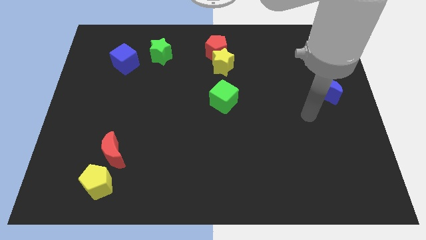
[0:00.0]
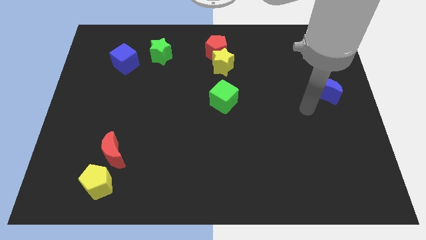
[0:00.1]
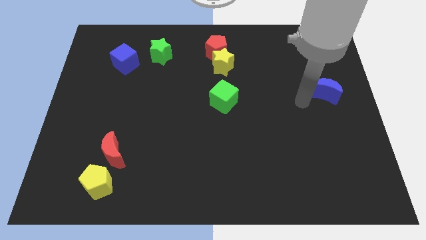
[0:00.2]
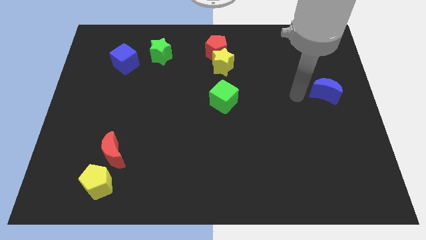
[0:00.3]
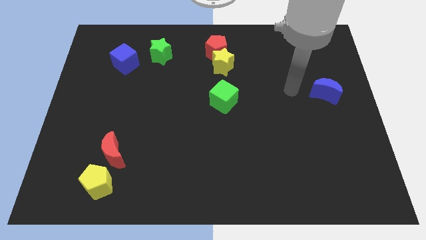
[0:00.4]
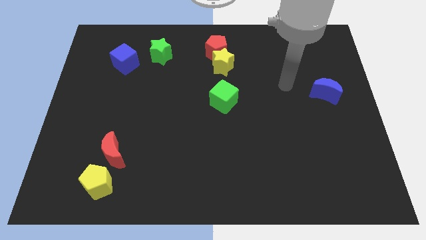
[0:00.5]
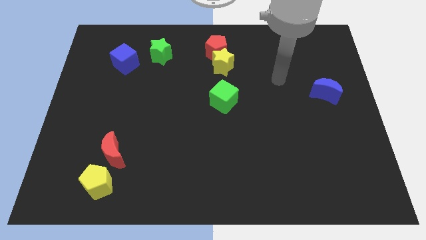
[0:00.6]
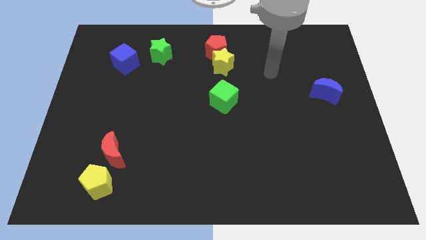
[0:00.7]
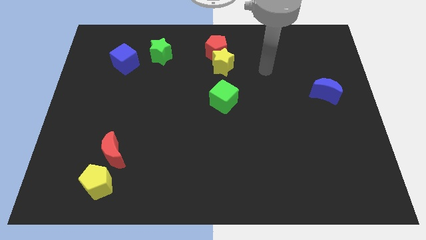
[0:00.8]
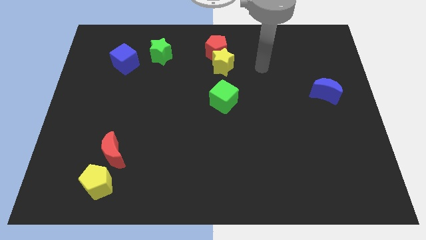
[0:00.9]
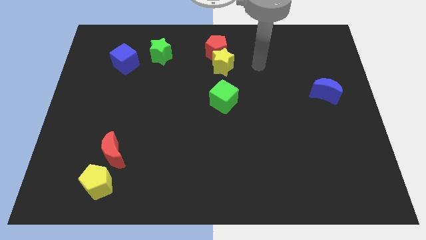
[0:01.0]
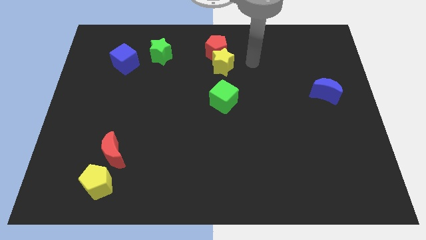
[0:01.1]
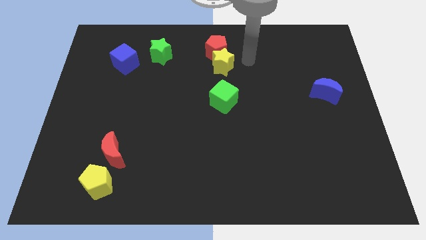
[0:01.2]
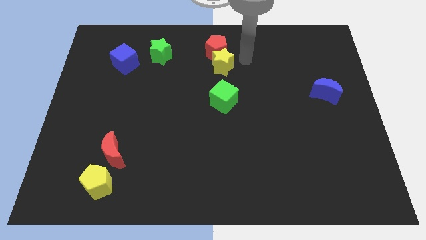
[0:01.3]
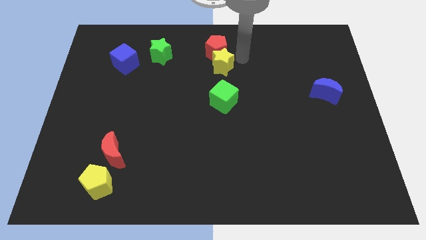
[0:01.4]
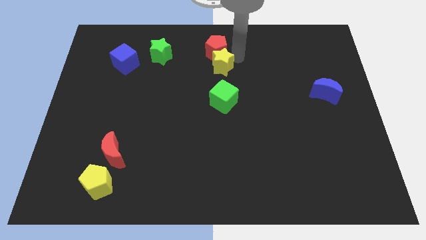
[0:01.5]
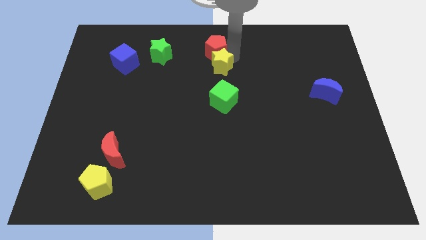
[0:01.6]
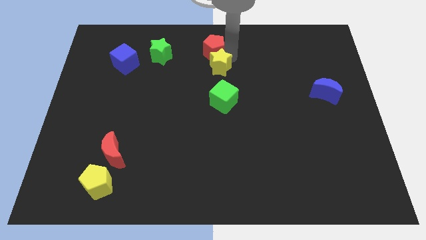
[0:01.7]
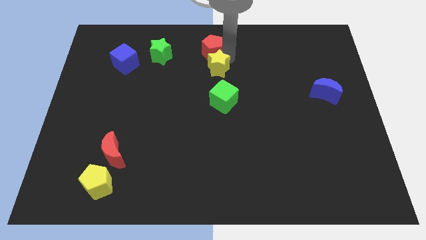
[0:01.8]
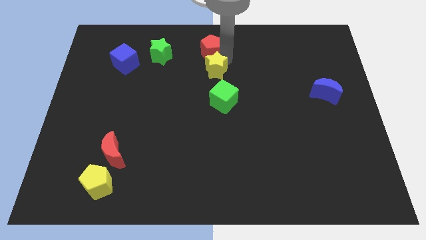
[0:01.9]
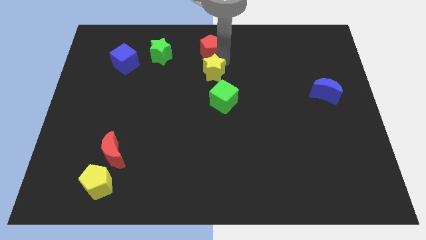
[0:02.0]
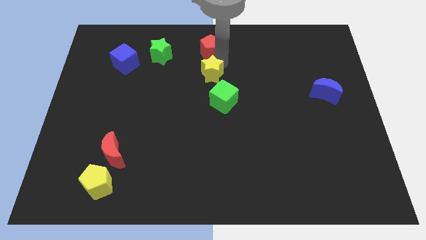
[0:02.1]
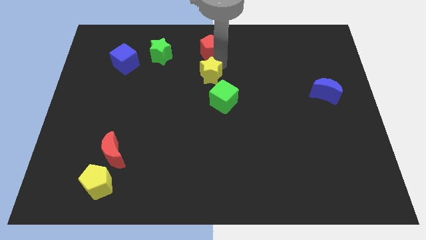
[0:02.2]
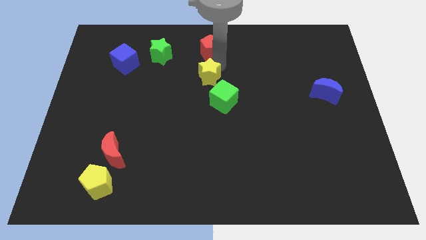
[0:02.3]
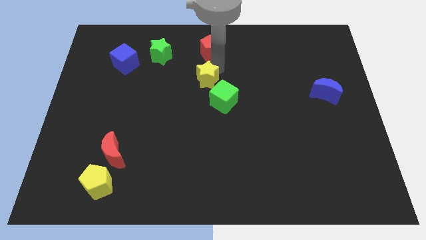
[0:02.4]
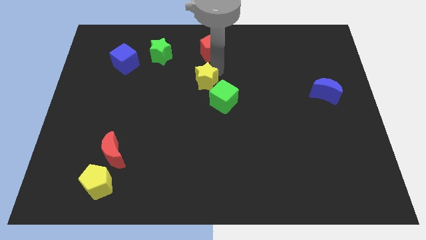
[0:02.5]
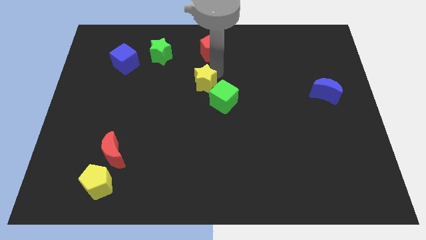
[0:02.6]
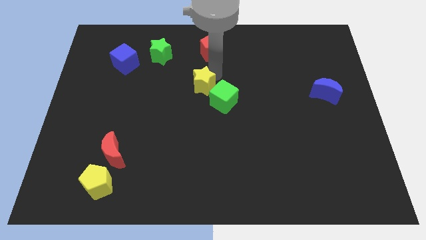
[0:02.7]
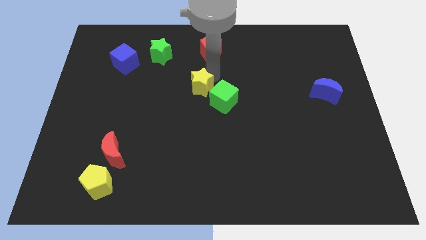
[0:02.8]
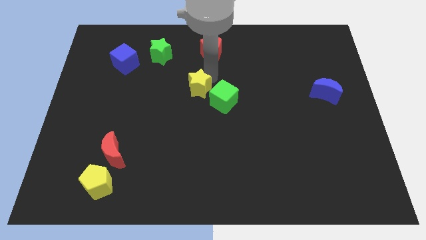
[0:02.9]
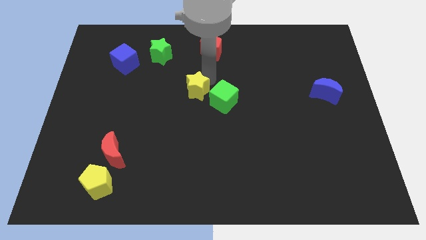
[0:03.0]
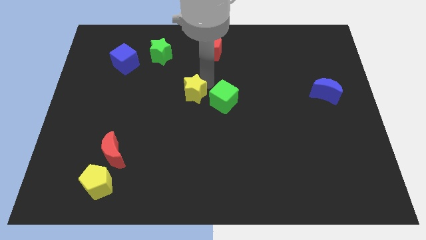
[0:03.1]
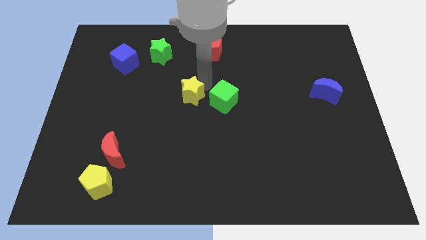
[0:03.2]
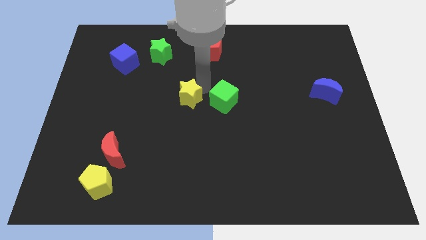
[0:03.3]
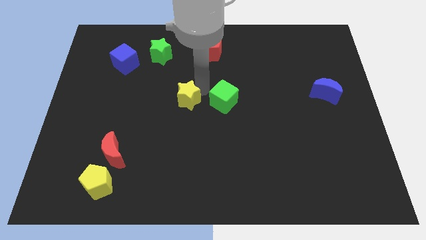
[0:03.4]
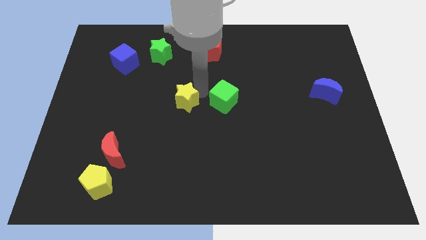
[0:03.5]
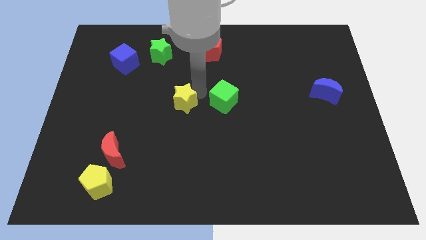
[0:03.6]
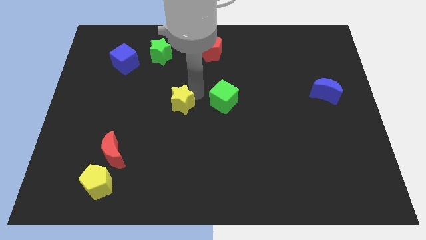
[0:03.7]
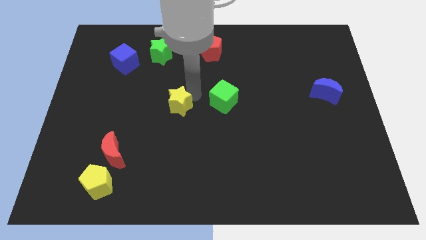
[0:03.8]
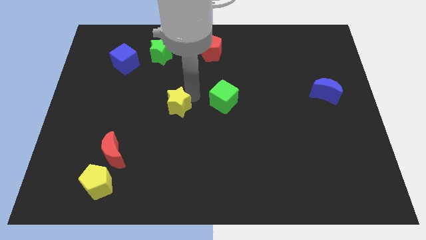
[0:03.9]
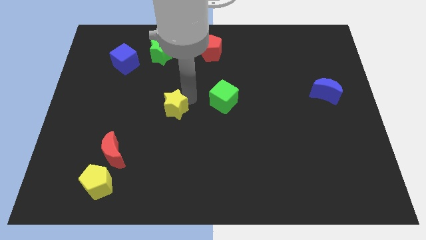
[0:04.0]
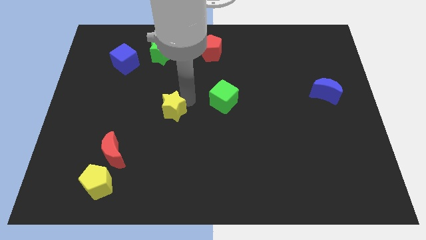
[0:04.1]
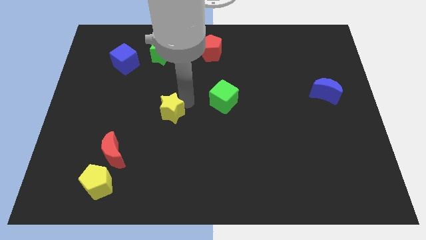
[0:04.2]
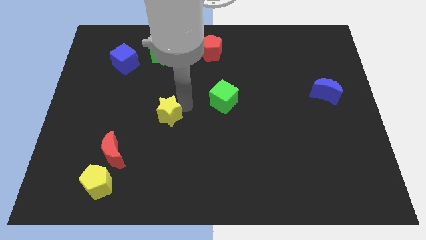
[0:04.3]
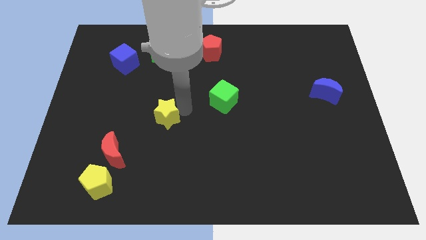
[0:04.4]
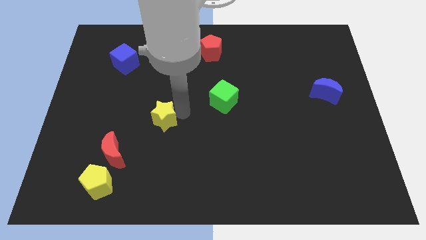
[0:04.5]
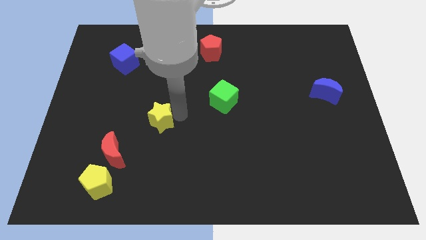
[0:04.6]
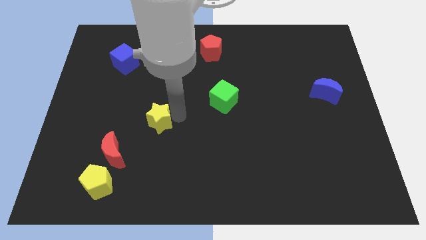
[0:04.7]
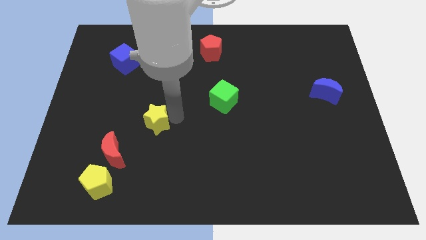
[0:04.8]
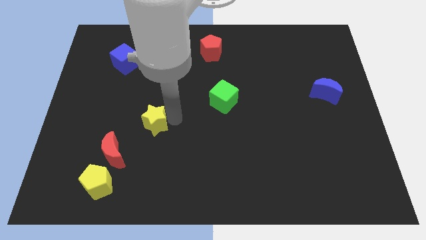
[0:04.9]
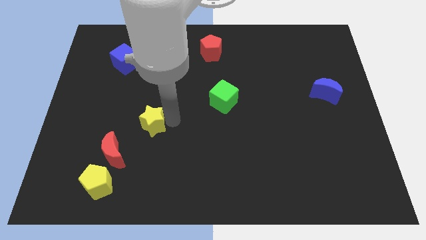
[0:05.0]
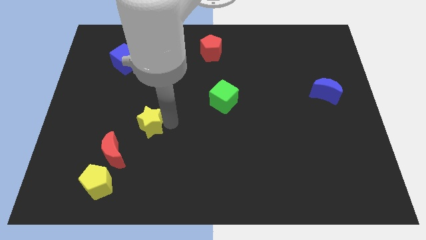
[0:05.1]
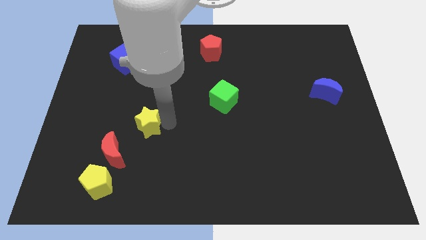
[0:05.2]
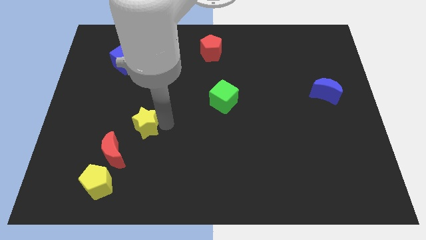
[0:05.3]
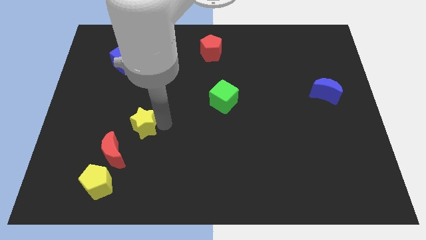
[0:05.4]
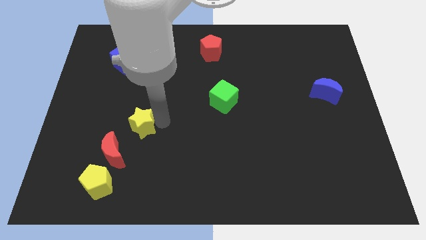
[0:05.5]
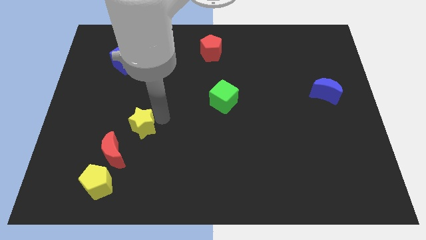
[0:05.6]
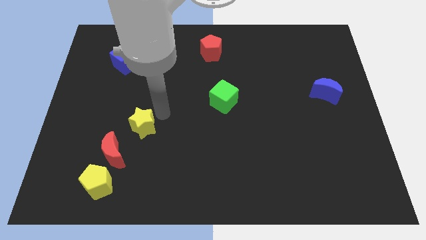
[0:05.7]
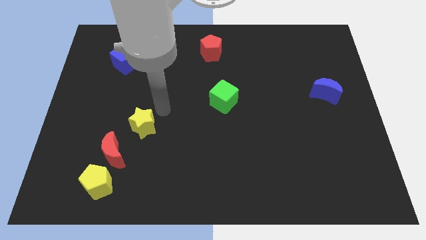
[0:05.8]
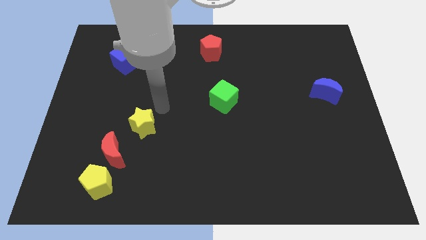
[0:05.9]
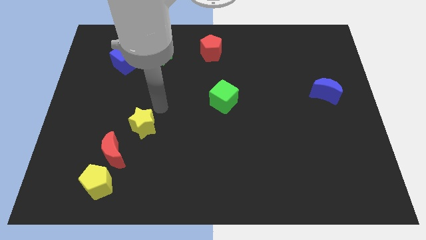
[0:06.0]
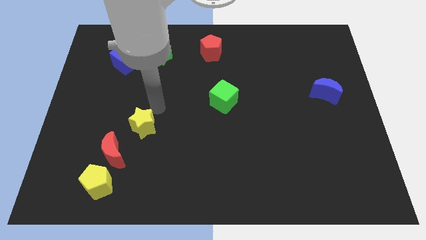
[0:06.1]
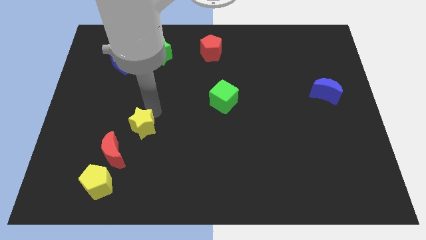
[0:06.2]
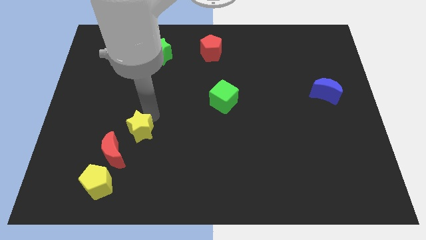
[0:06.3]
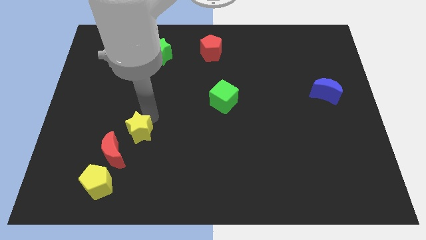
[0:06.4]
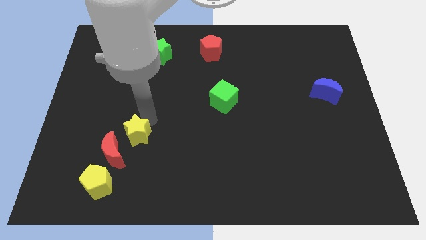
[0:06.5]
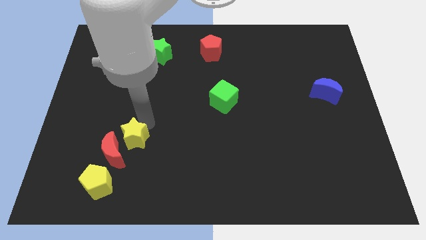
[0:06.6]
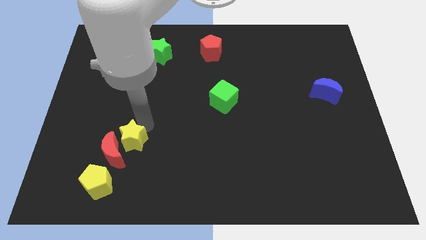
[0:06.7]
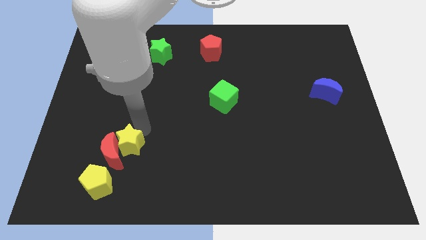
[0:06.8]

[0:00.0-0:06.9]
push the yellow star to the red moon

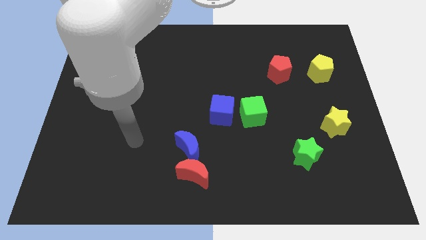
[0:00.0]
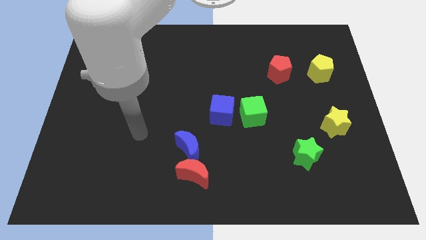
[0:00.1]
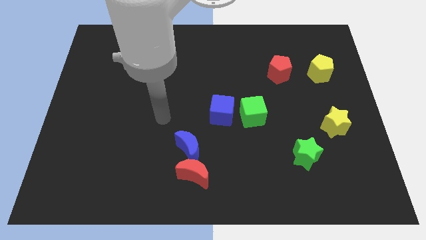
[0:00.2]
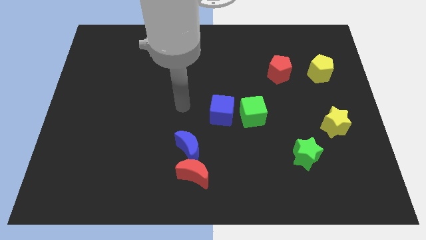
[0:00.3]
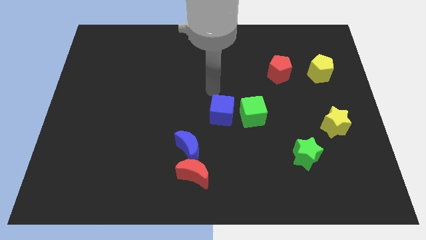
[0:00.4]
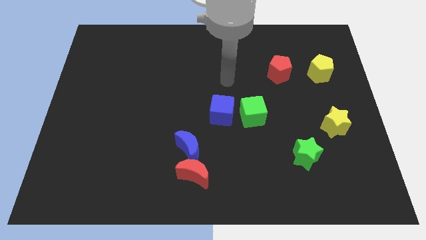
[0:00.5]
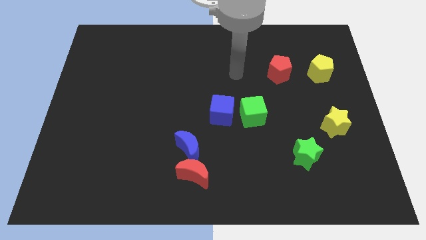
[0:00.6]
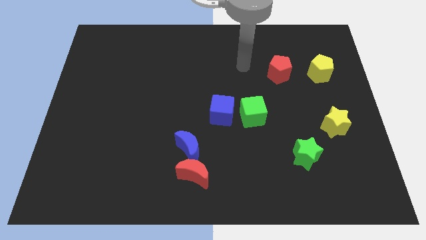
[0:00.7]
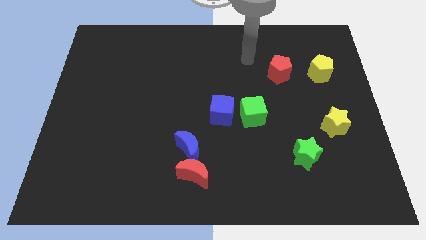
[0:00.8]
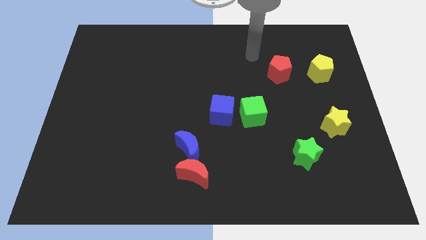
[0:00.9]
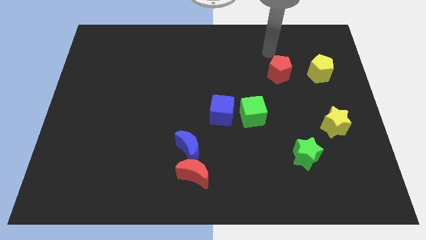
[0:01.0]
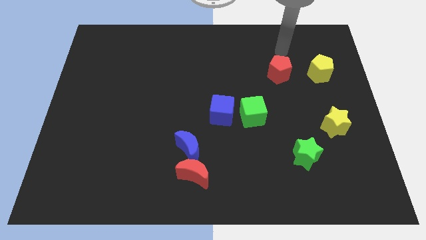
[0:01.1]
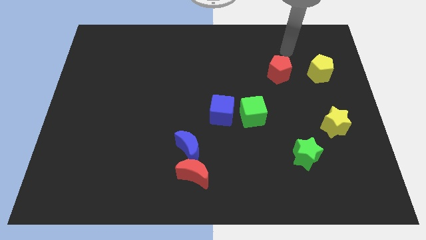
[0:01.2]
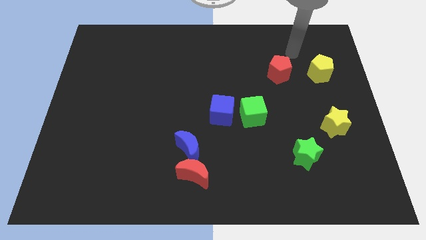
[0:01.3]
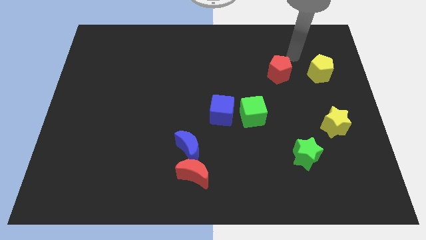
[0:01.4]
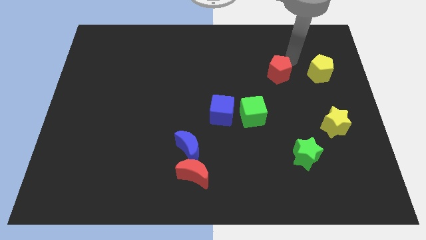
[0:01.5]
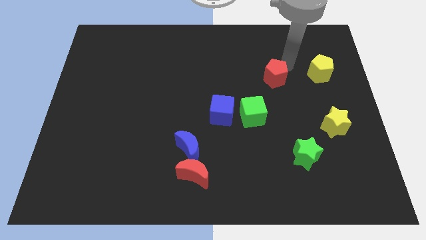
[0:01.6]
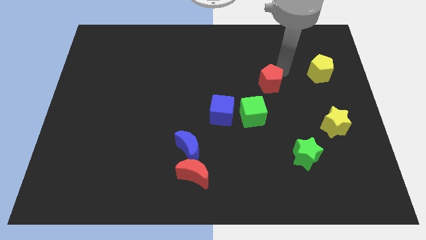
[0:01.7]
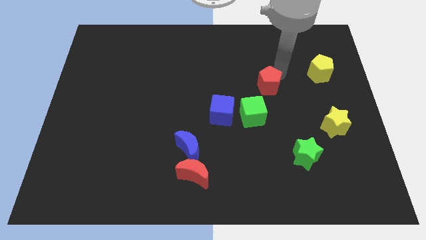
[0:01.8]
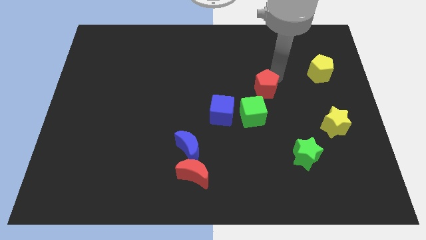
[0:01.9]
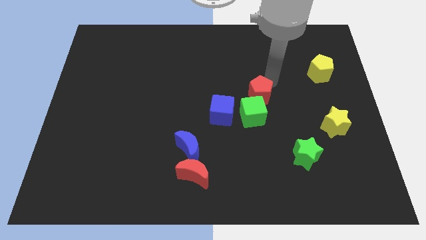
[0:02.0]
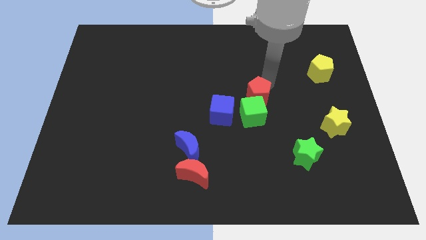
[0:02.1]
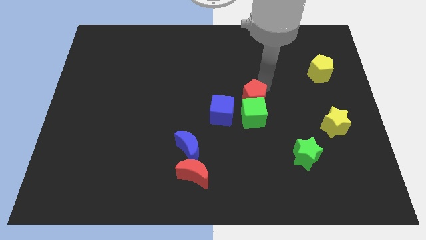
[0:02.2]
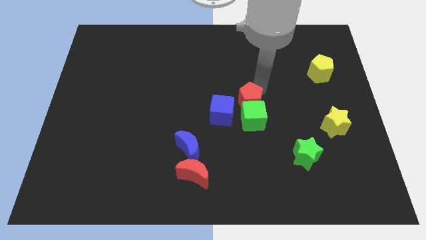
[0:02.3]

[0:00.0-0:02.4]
move the red pentagon next to the green cube
